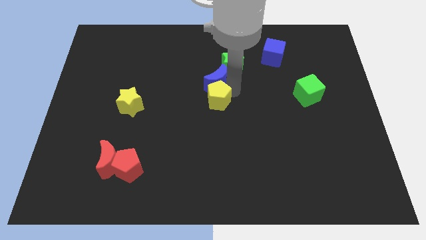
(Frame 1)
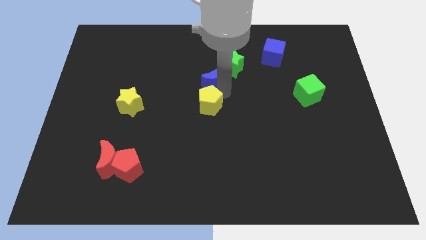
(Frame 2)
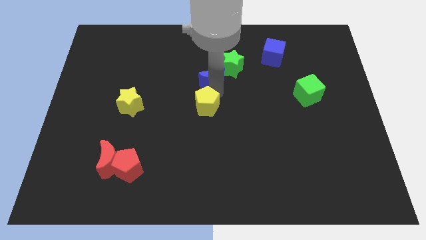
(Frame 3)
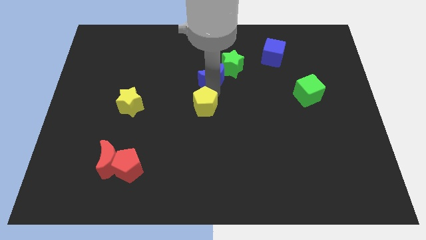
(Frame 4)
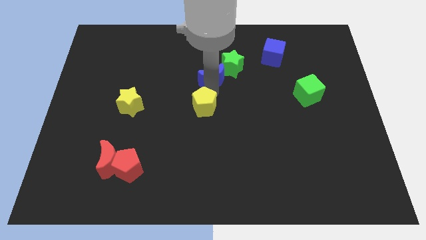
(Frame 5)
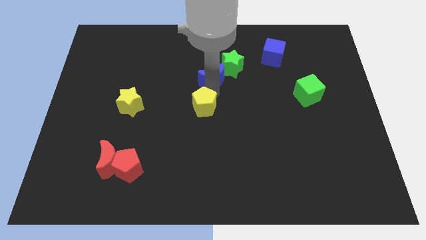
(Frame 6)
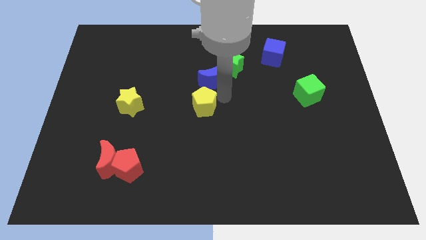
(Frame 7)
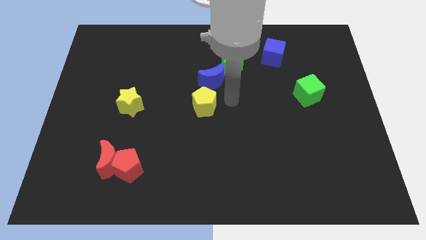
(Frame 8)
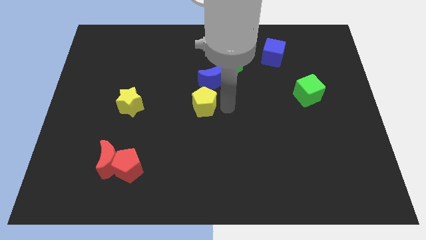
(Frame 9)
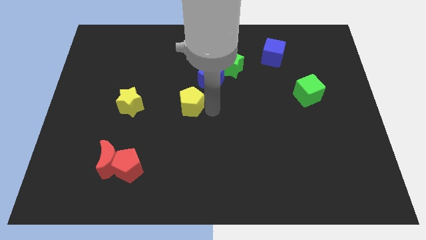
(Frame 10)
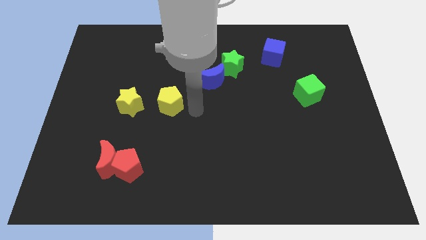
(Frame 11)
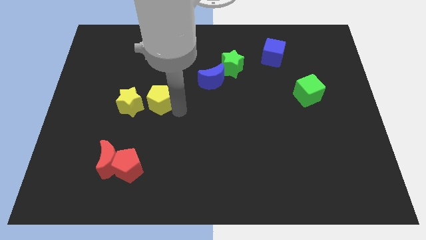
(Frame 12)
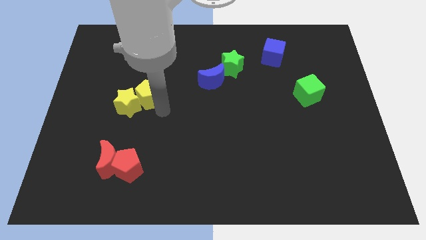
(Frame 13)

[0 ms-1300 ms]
put the yellow pentagon on the right side of the yellow star

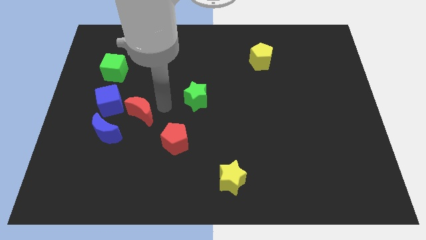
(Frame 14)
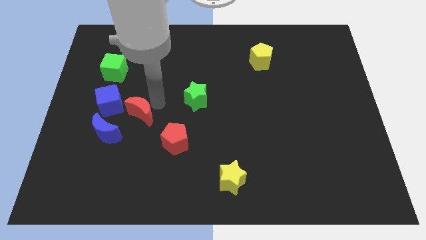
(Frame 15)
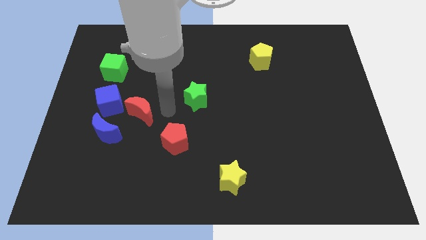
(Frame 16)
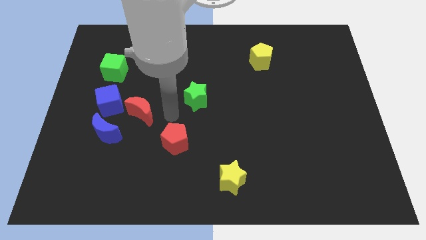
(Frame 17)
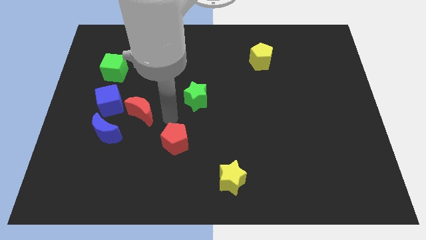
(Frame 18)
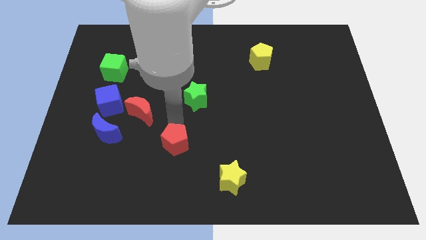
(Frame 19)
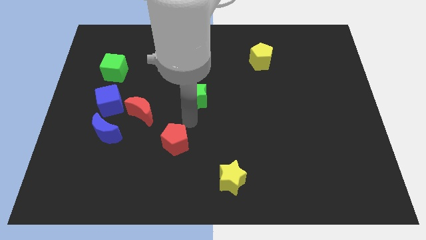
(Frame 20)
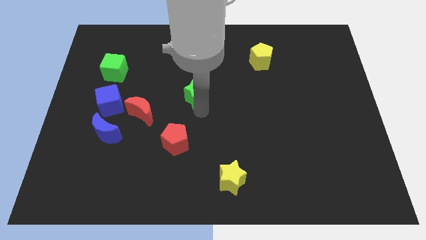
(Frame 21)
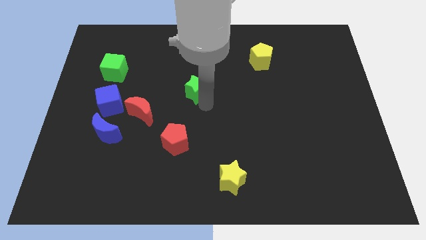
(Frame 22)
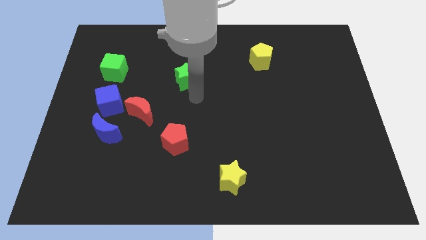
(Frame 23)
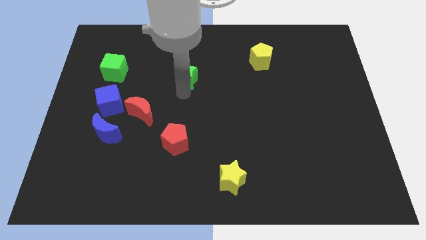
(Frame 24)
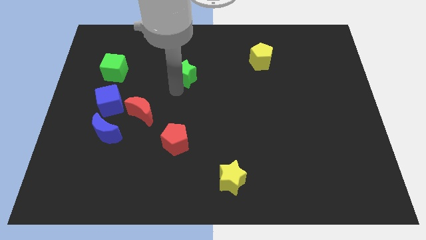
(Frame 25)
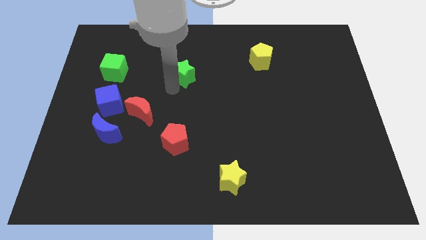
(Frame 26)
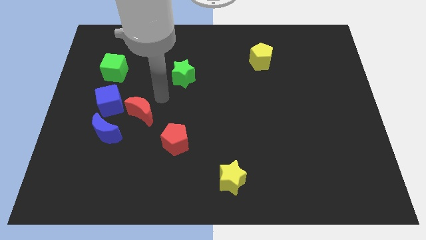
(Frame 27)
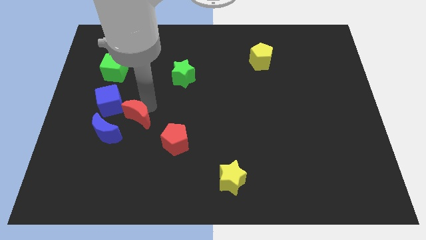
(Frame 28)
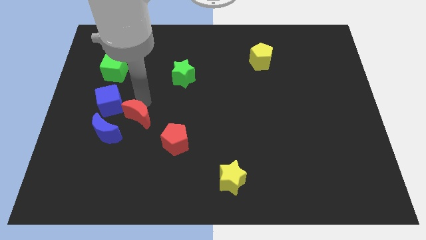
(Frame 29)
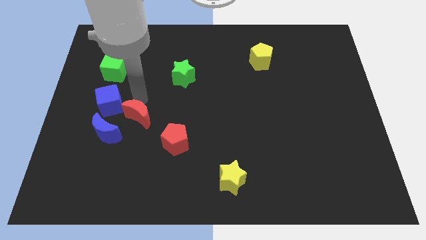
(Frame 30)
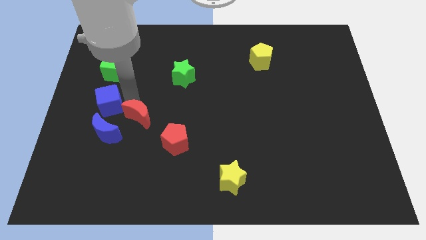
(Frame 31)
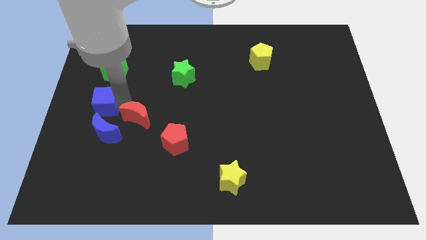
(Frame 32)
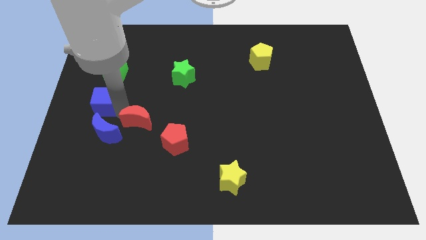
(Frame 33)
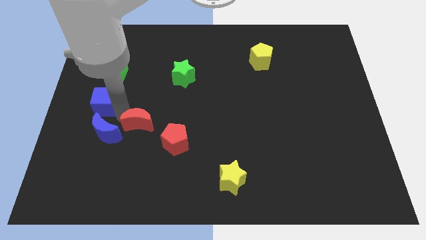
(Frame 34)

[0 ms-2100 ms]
place the green star horizontally to the right side of the green cube

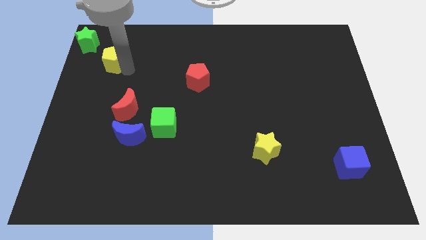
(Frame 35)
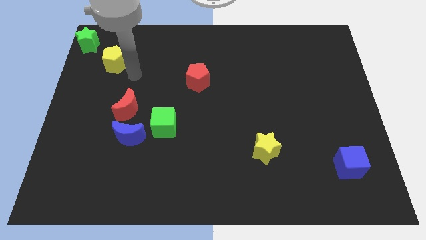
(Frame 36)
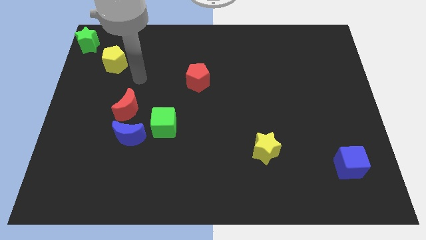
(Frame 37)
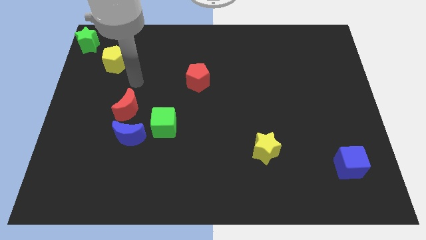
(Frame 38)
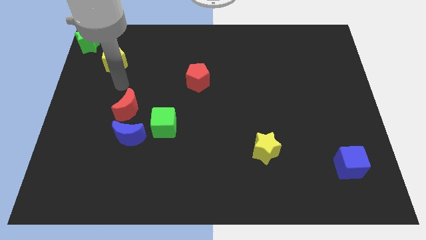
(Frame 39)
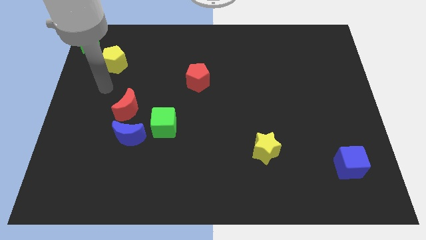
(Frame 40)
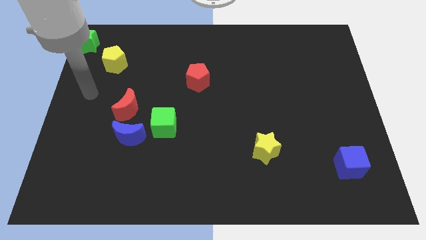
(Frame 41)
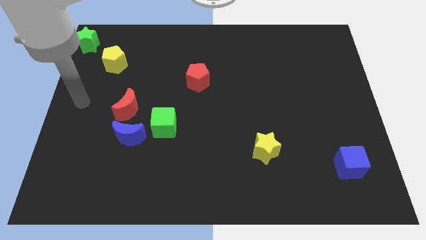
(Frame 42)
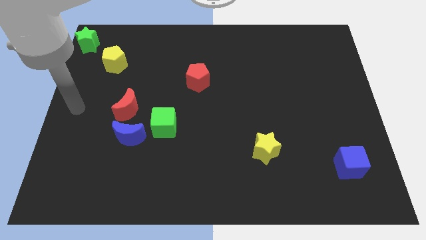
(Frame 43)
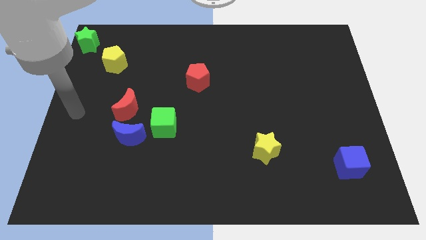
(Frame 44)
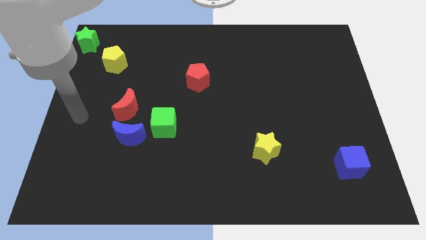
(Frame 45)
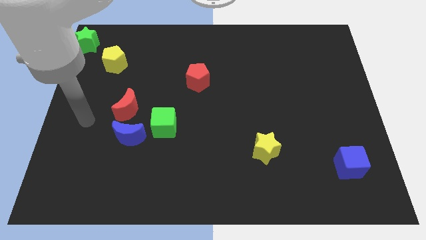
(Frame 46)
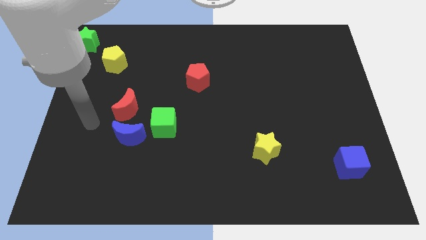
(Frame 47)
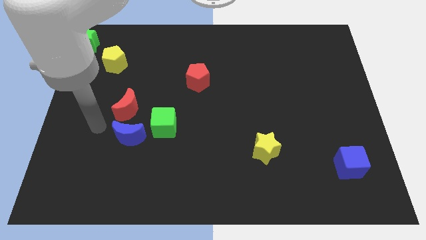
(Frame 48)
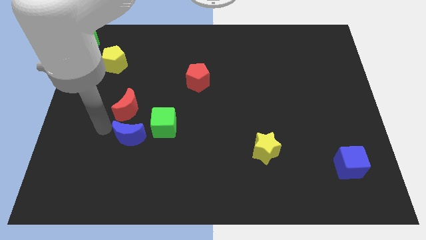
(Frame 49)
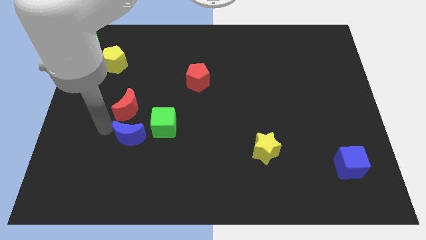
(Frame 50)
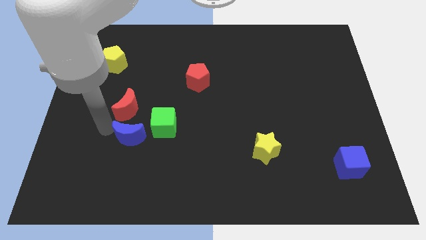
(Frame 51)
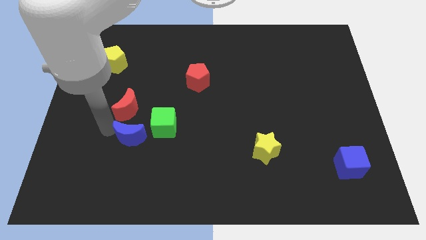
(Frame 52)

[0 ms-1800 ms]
move the arm away from the yellow pentagon

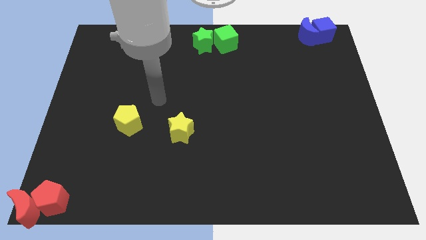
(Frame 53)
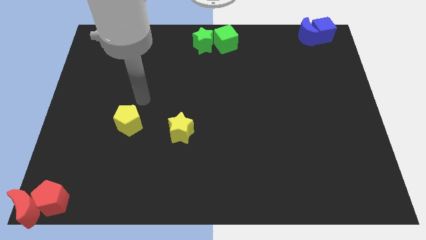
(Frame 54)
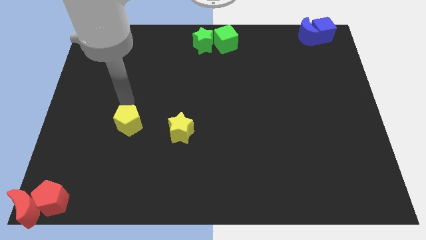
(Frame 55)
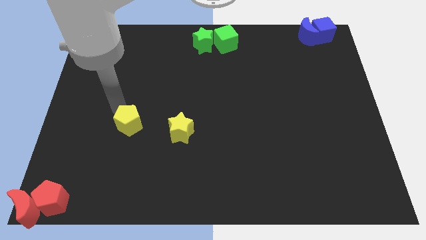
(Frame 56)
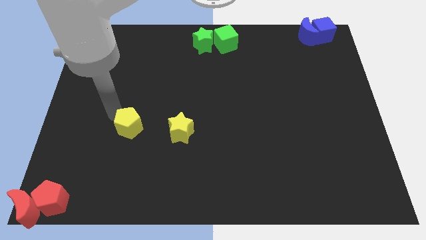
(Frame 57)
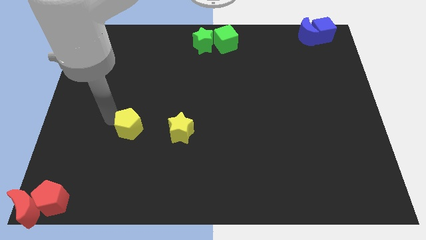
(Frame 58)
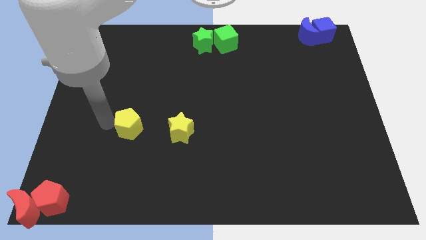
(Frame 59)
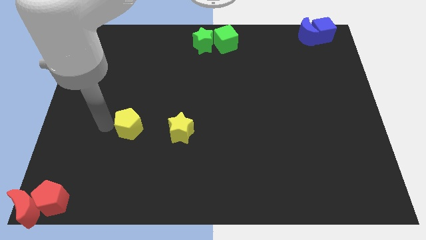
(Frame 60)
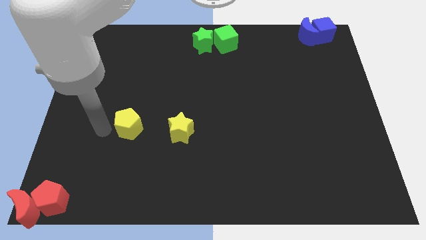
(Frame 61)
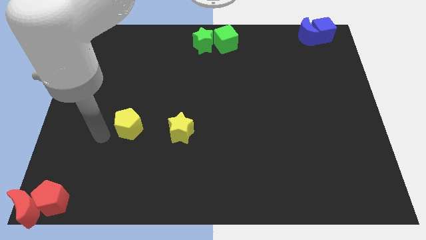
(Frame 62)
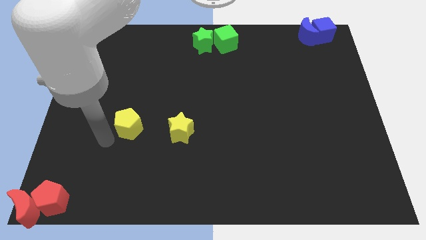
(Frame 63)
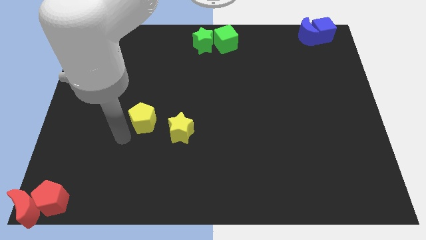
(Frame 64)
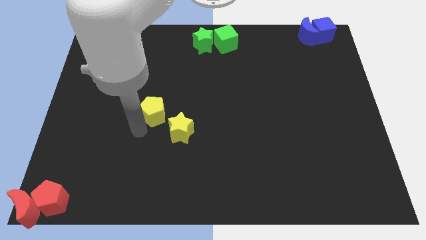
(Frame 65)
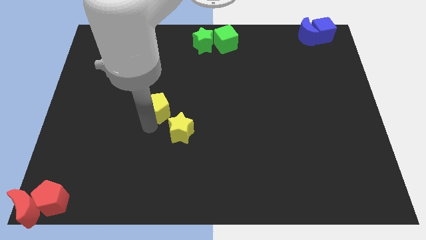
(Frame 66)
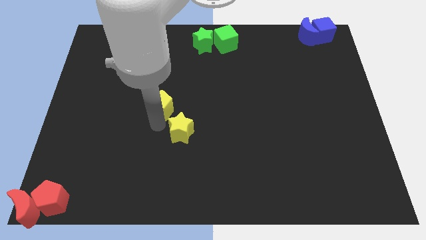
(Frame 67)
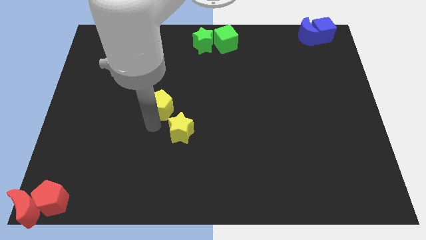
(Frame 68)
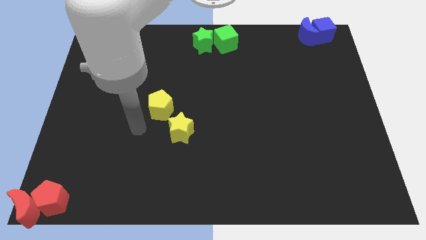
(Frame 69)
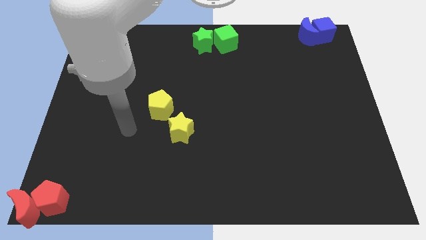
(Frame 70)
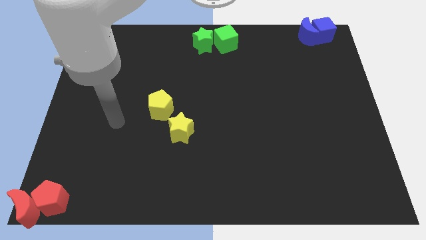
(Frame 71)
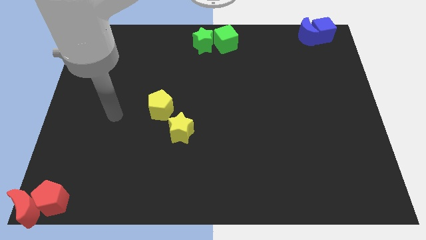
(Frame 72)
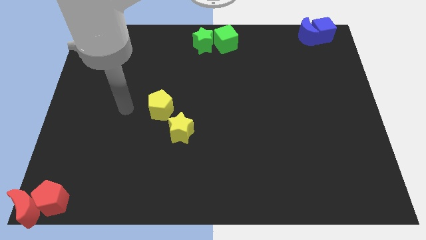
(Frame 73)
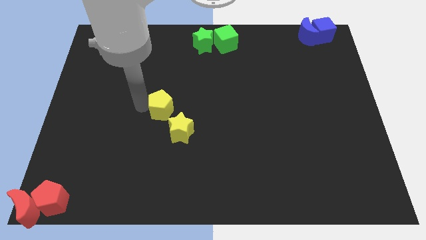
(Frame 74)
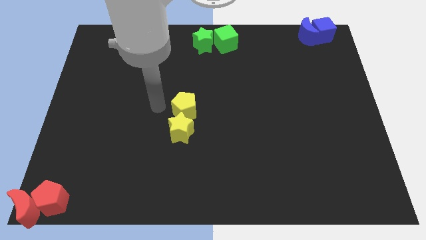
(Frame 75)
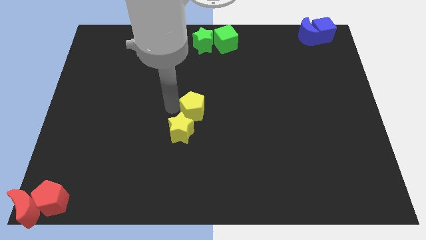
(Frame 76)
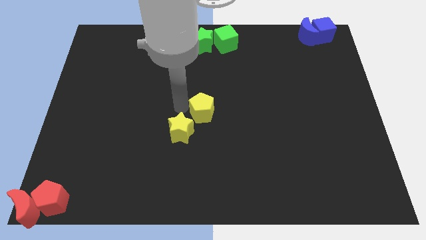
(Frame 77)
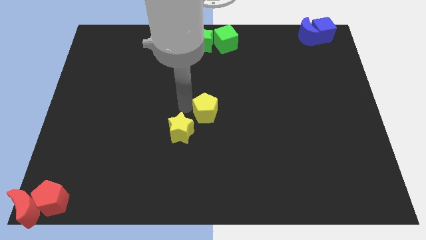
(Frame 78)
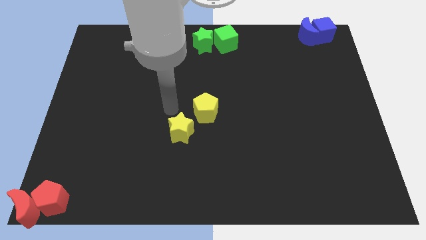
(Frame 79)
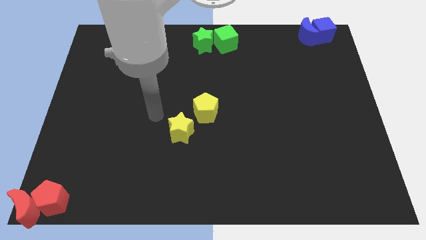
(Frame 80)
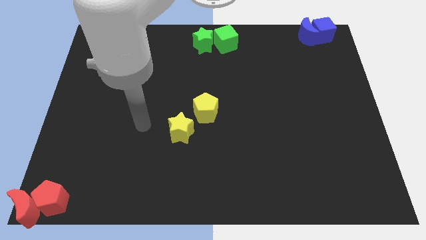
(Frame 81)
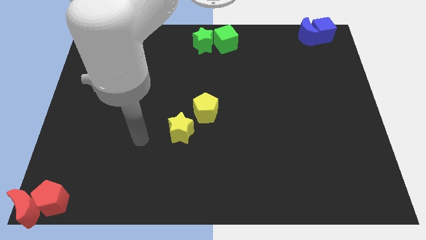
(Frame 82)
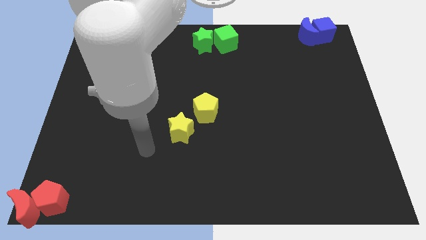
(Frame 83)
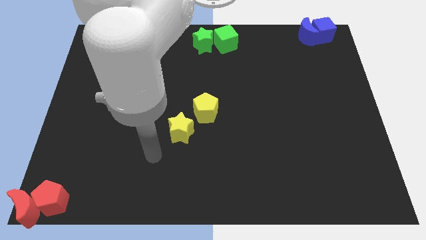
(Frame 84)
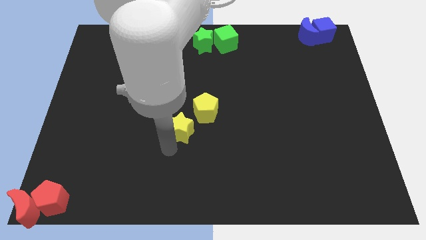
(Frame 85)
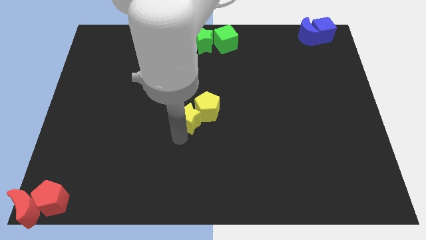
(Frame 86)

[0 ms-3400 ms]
place the yellow pentagon at the top right of the yellow star

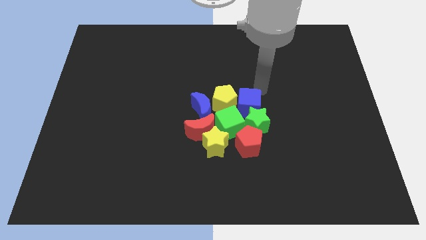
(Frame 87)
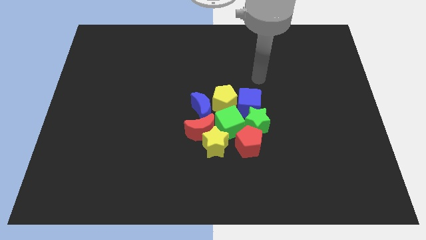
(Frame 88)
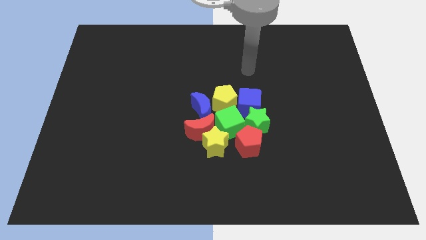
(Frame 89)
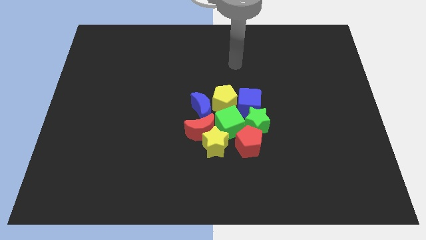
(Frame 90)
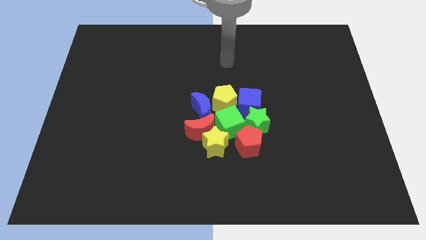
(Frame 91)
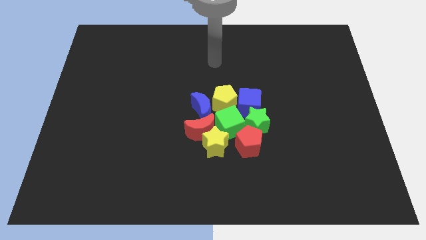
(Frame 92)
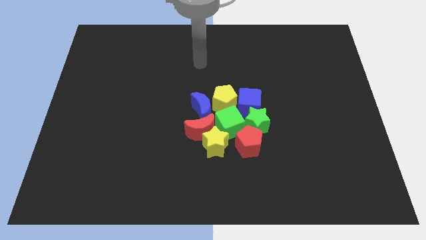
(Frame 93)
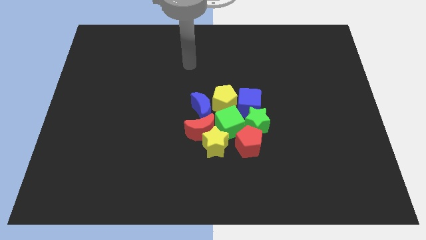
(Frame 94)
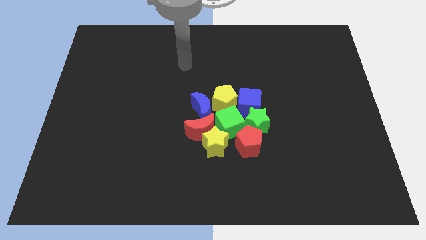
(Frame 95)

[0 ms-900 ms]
move the arm to the top center of the board
